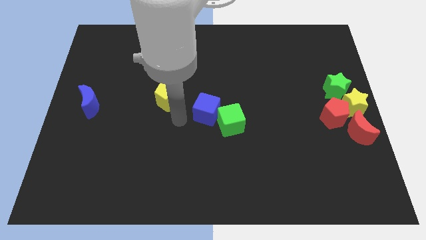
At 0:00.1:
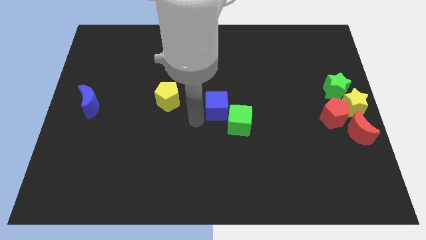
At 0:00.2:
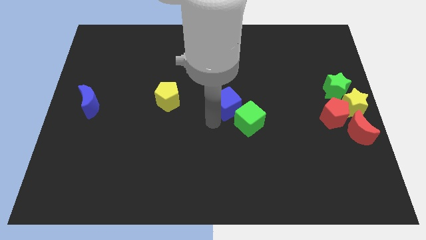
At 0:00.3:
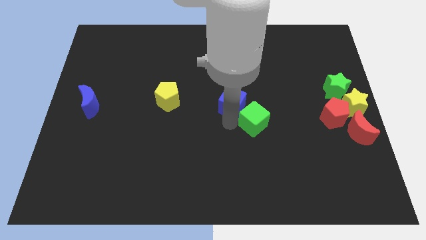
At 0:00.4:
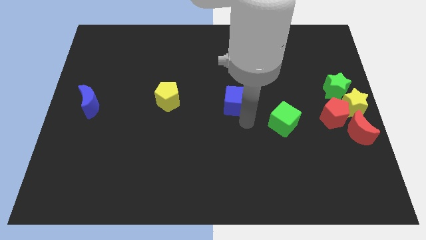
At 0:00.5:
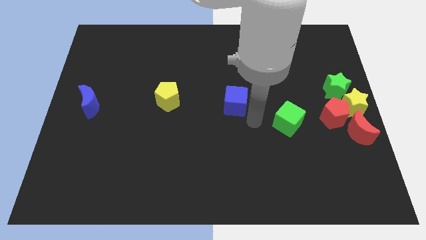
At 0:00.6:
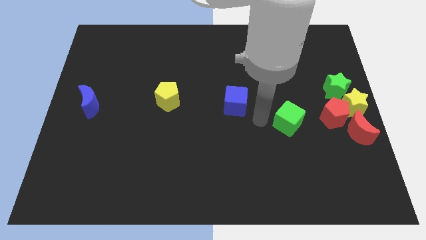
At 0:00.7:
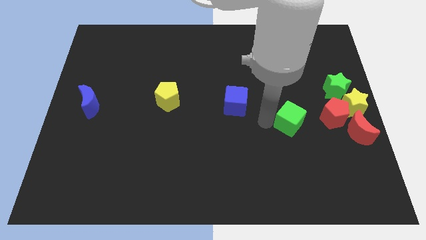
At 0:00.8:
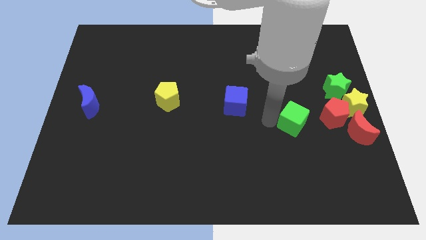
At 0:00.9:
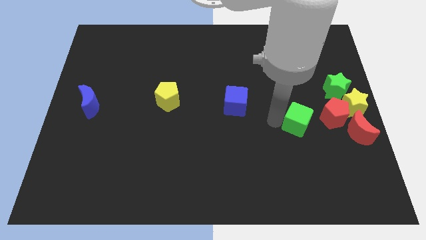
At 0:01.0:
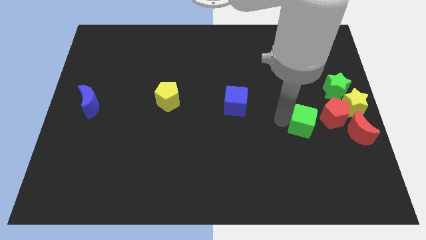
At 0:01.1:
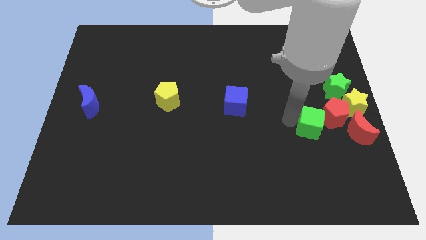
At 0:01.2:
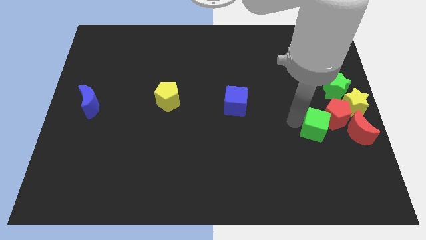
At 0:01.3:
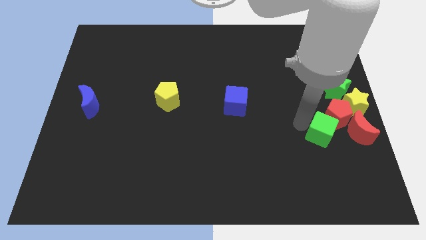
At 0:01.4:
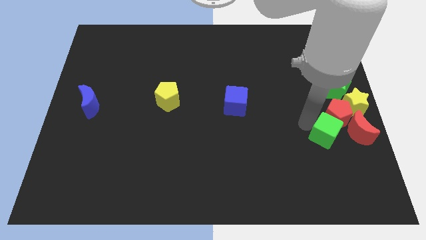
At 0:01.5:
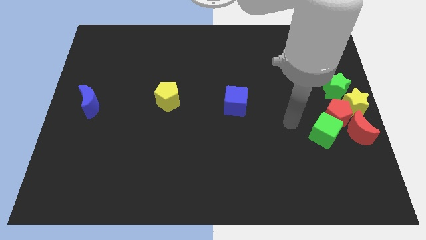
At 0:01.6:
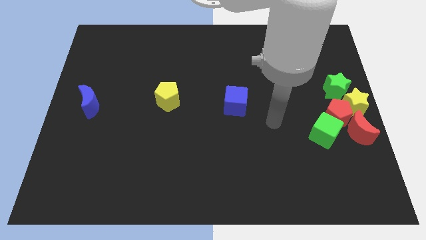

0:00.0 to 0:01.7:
move the green cube into the red pentagon

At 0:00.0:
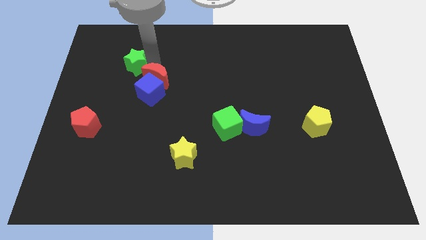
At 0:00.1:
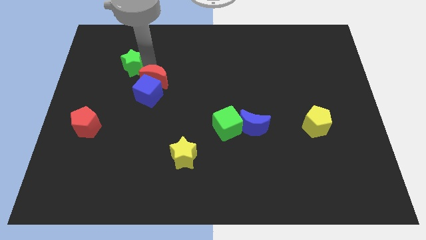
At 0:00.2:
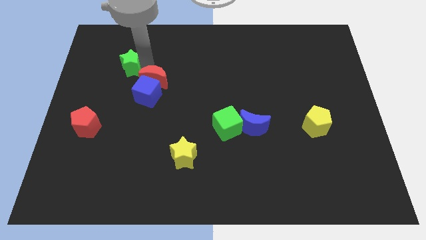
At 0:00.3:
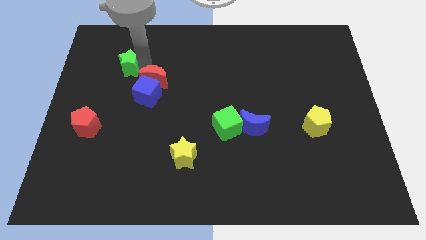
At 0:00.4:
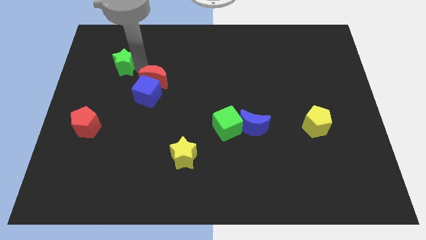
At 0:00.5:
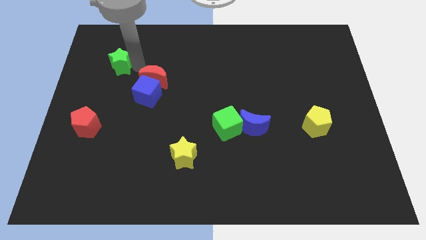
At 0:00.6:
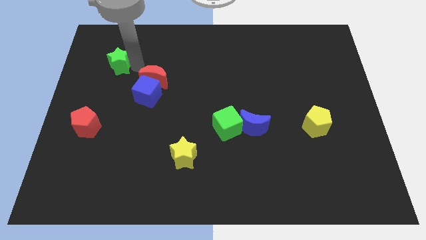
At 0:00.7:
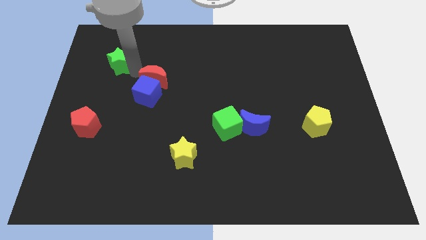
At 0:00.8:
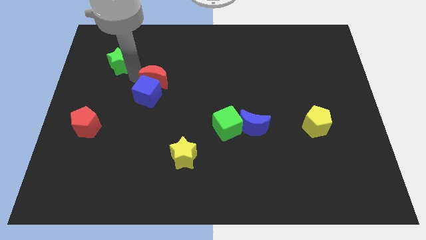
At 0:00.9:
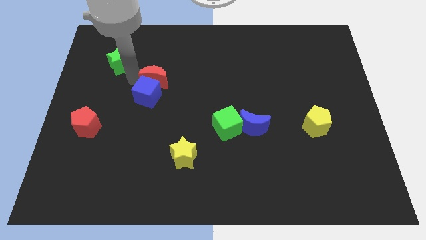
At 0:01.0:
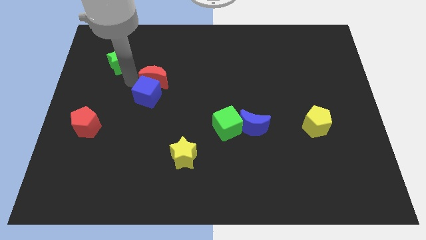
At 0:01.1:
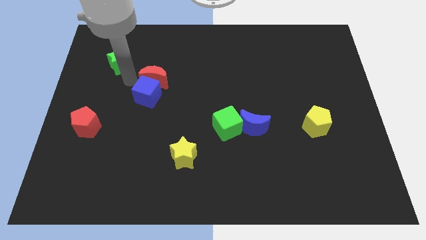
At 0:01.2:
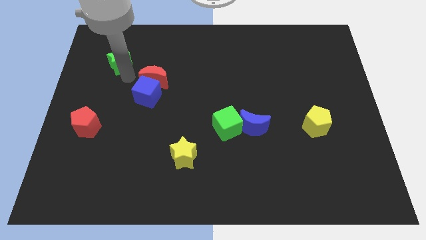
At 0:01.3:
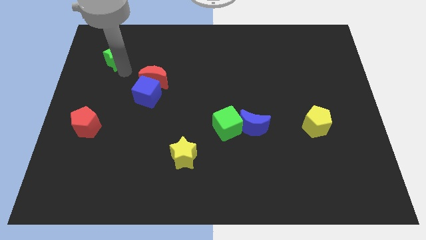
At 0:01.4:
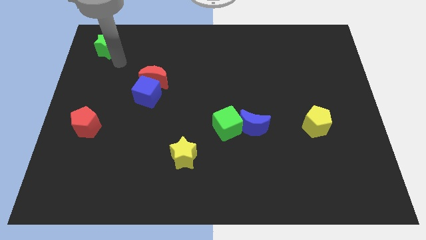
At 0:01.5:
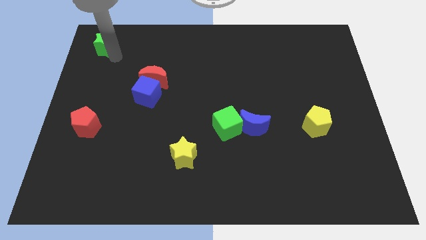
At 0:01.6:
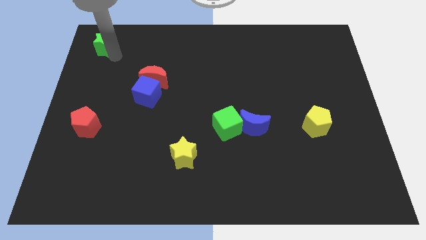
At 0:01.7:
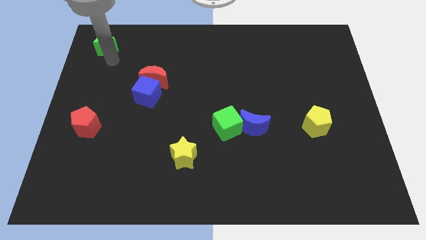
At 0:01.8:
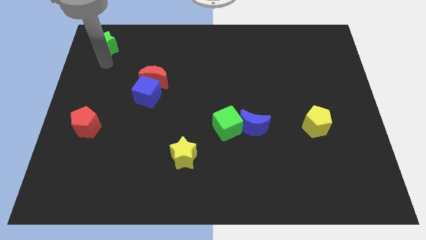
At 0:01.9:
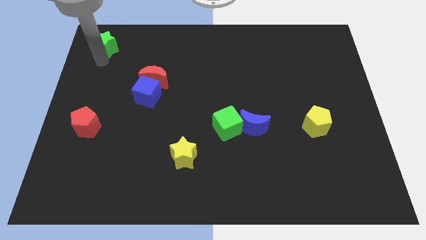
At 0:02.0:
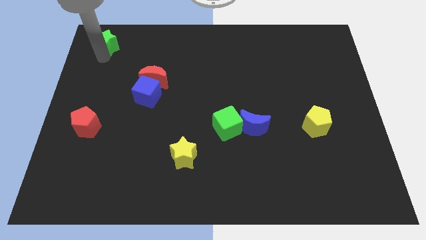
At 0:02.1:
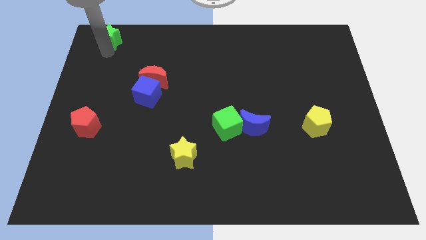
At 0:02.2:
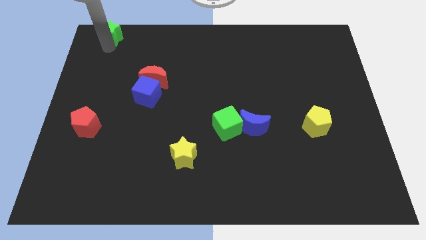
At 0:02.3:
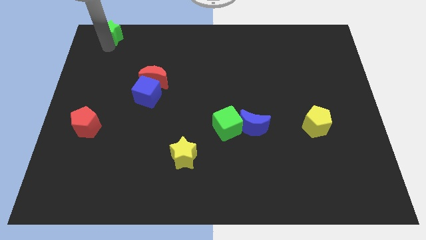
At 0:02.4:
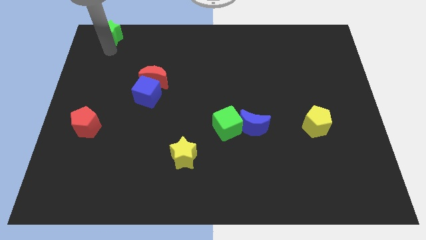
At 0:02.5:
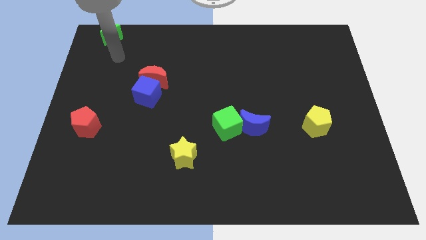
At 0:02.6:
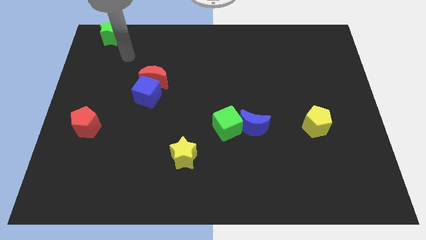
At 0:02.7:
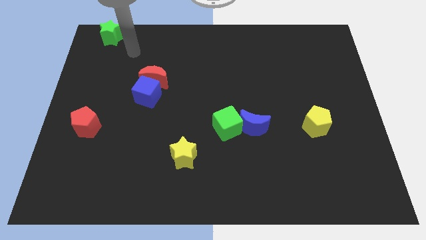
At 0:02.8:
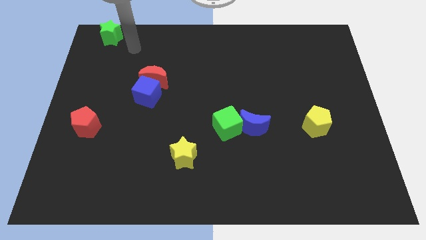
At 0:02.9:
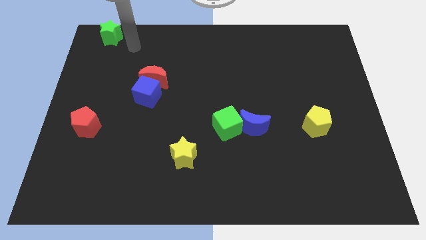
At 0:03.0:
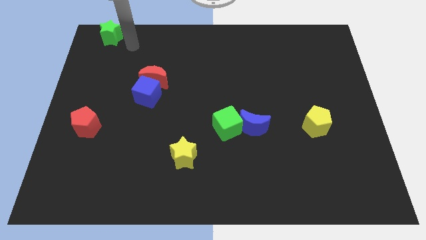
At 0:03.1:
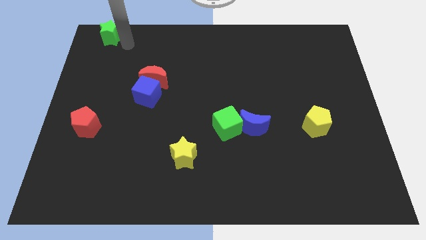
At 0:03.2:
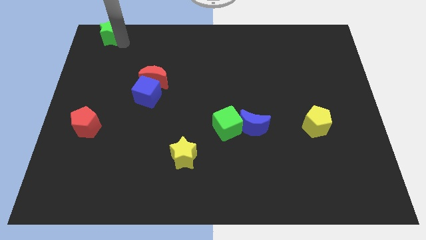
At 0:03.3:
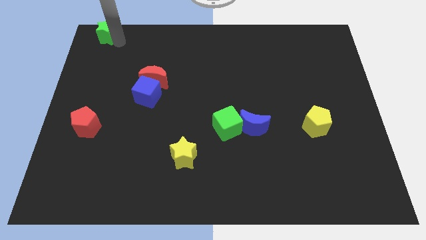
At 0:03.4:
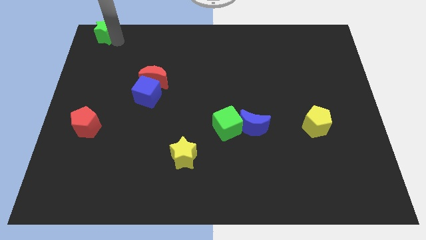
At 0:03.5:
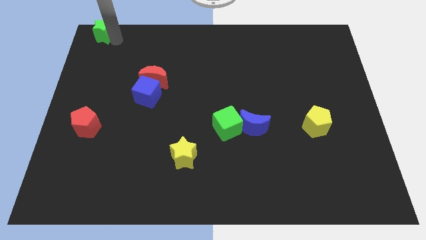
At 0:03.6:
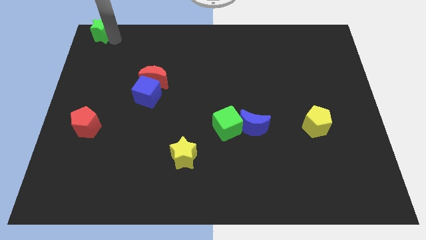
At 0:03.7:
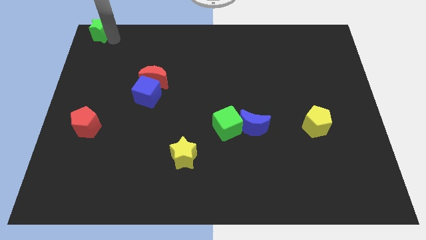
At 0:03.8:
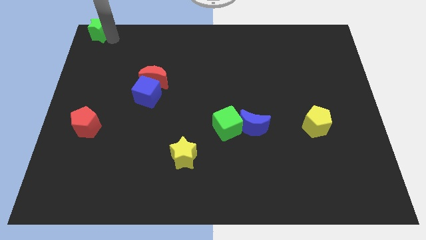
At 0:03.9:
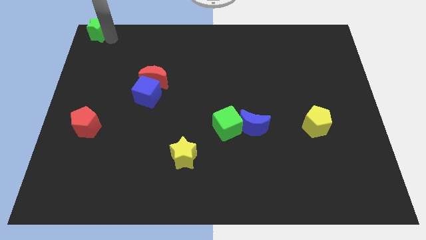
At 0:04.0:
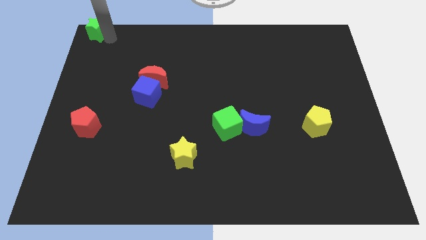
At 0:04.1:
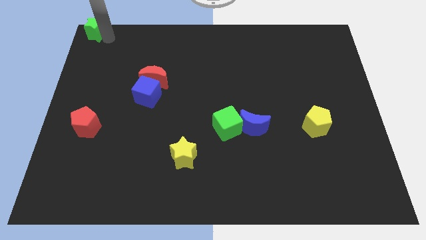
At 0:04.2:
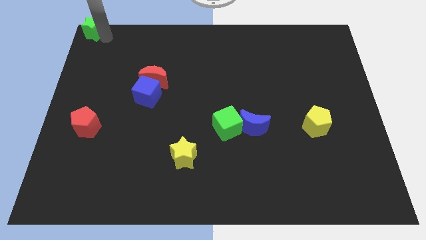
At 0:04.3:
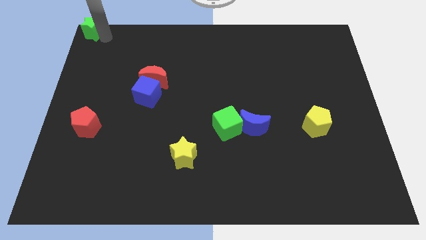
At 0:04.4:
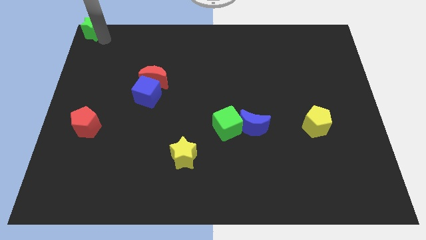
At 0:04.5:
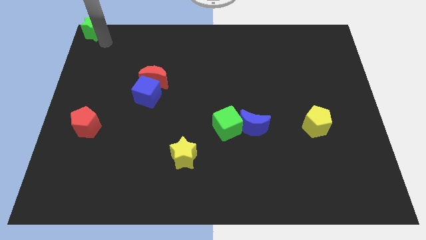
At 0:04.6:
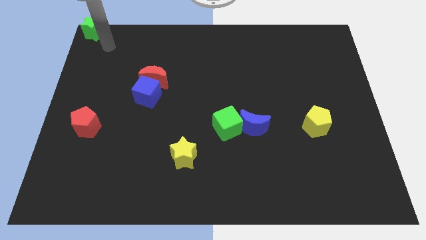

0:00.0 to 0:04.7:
place the green star at the top left corner of the board

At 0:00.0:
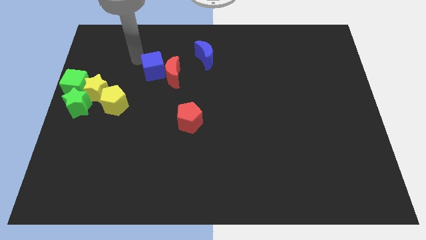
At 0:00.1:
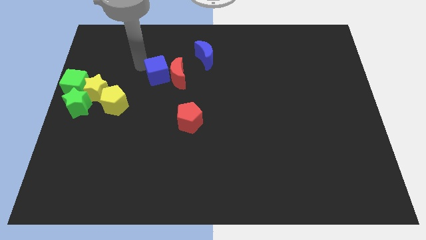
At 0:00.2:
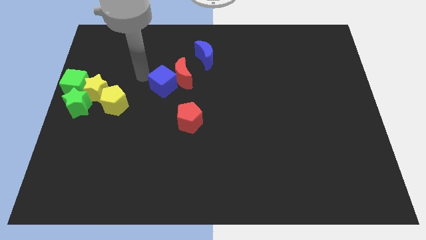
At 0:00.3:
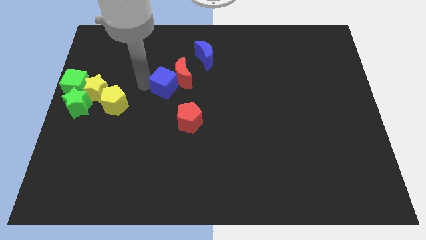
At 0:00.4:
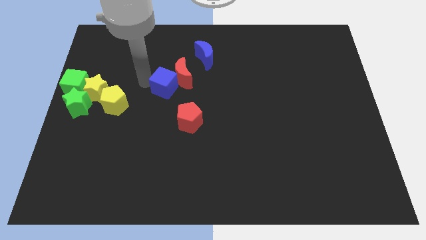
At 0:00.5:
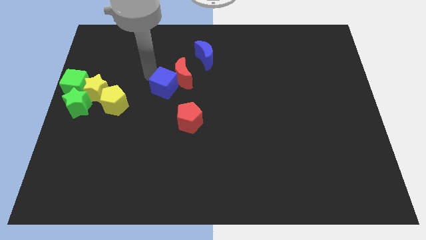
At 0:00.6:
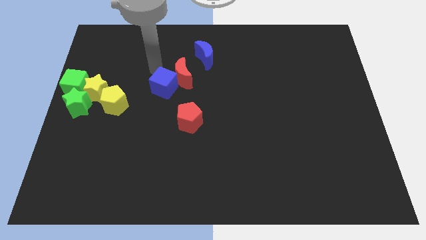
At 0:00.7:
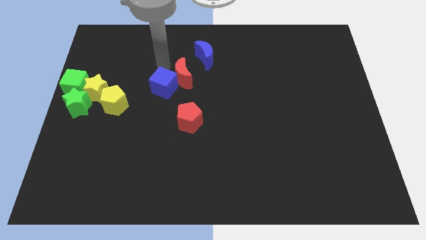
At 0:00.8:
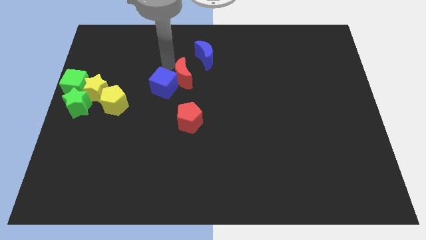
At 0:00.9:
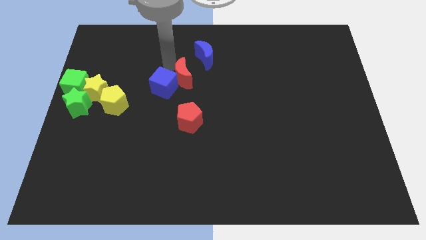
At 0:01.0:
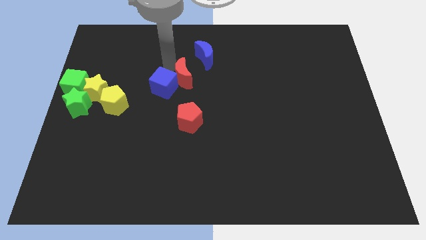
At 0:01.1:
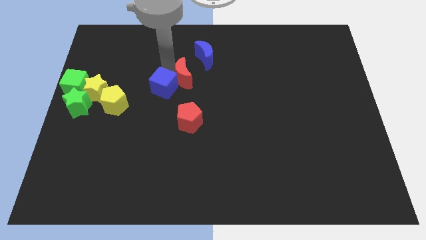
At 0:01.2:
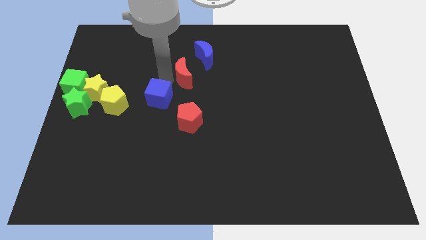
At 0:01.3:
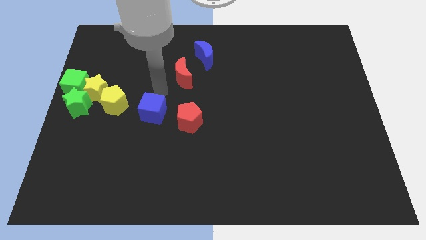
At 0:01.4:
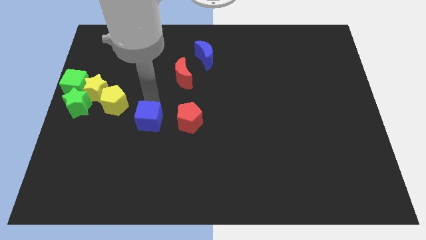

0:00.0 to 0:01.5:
place the blue cube left to the red pentagon

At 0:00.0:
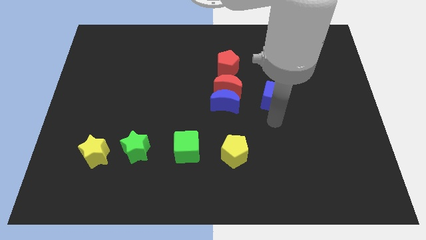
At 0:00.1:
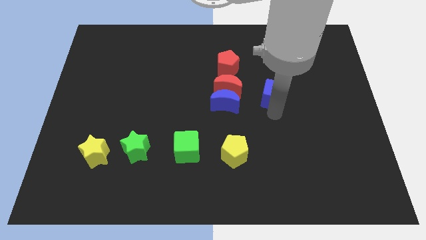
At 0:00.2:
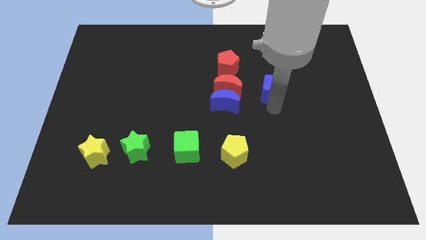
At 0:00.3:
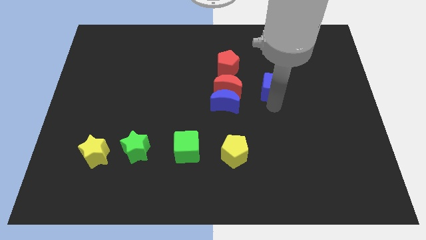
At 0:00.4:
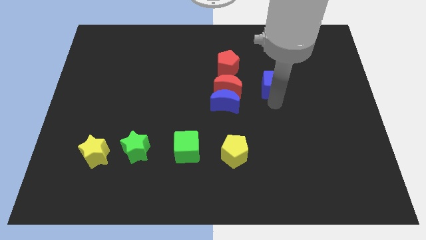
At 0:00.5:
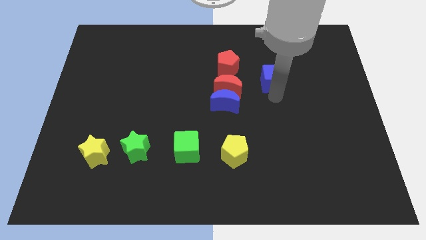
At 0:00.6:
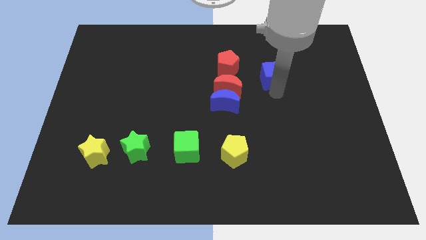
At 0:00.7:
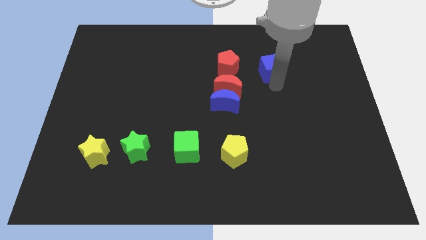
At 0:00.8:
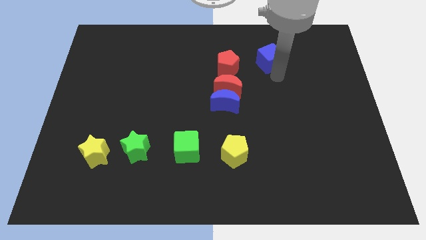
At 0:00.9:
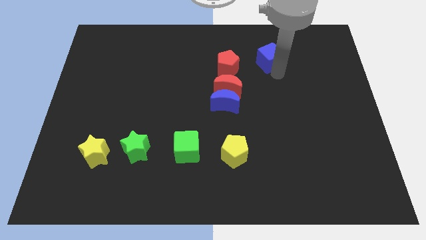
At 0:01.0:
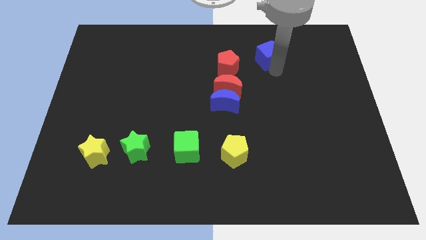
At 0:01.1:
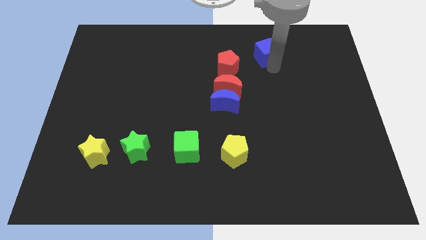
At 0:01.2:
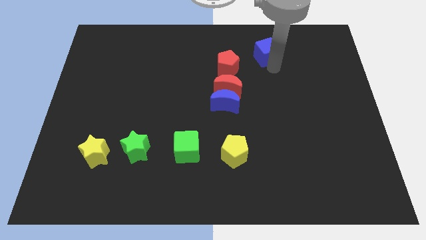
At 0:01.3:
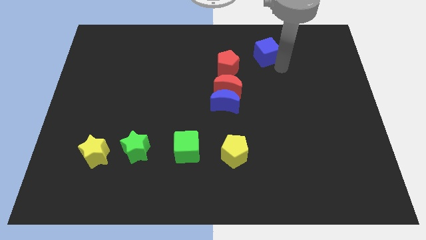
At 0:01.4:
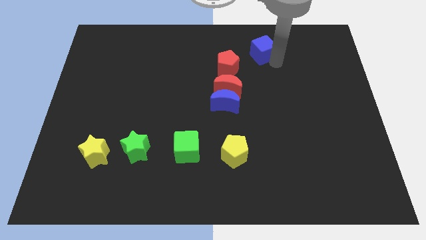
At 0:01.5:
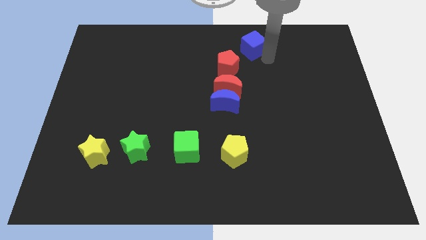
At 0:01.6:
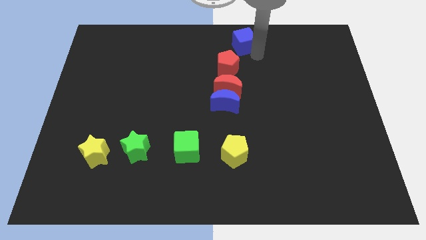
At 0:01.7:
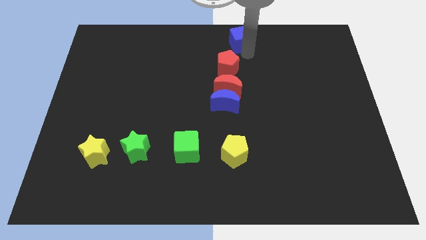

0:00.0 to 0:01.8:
push the blue cube towards the top center of the board
